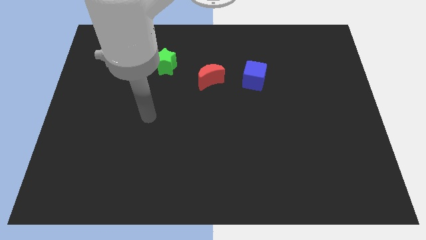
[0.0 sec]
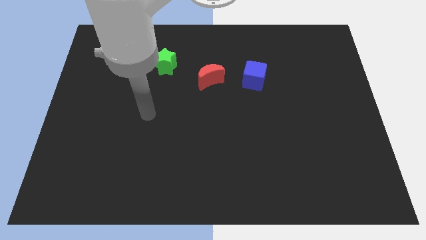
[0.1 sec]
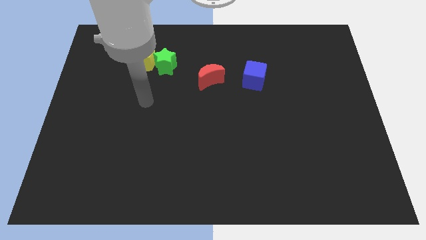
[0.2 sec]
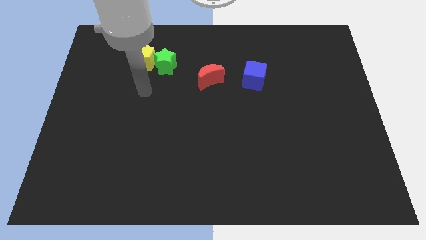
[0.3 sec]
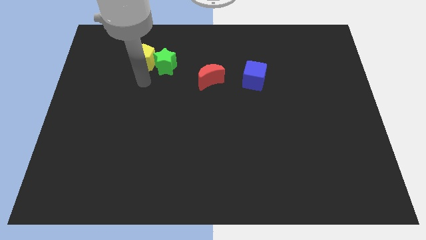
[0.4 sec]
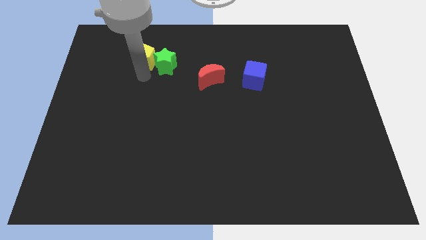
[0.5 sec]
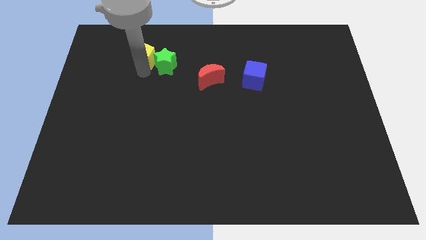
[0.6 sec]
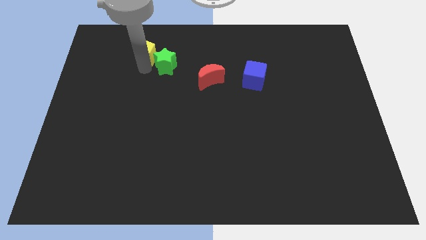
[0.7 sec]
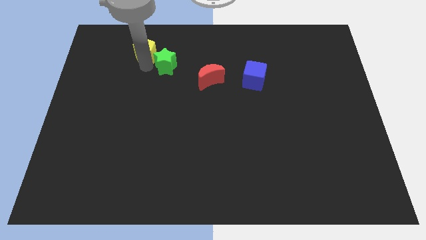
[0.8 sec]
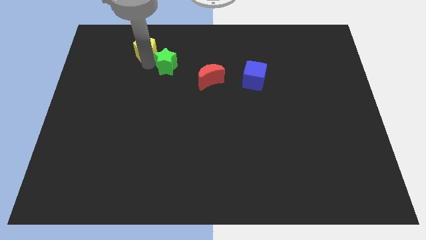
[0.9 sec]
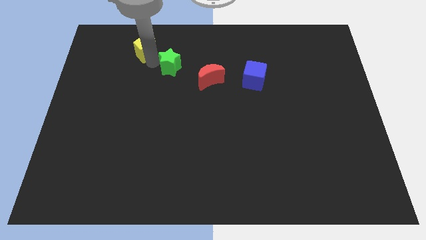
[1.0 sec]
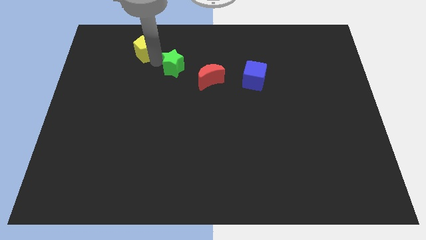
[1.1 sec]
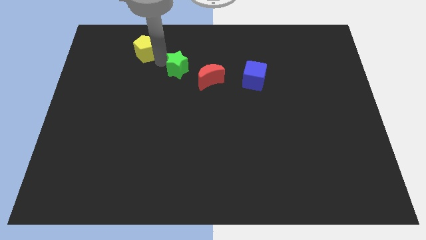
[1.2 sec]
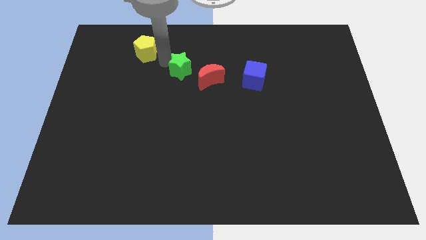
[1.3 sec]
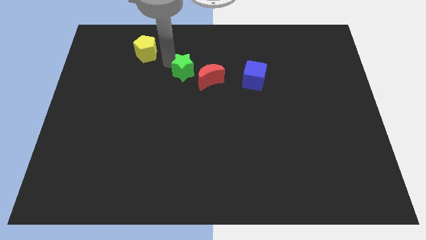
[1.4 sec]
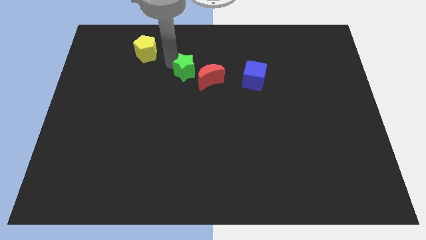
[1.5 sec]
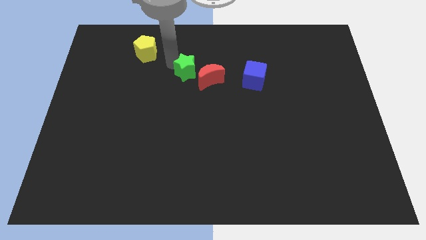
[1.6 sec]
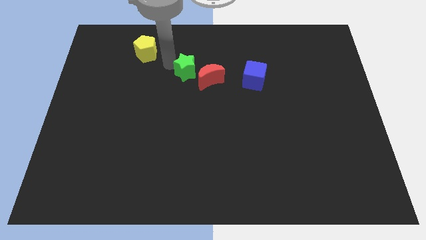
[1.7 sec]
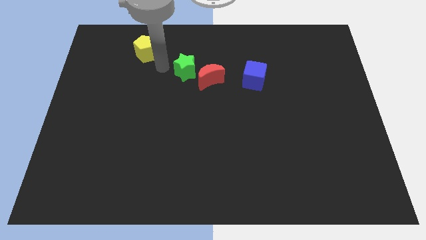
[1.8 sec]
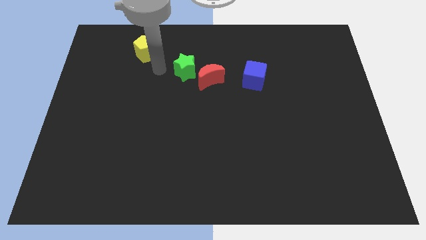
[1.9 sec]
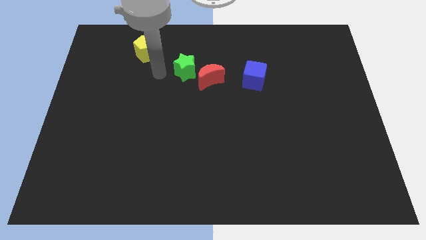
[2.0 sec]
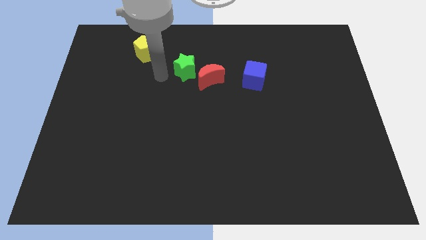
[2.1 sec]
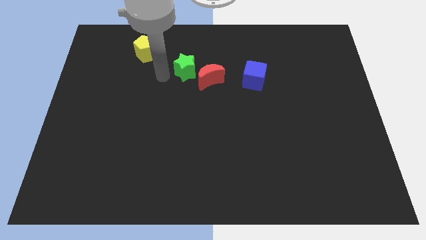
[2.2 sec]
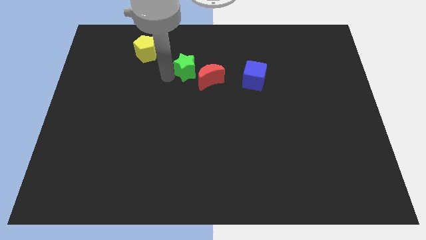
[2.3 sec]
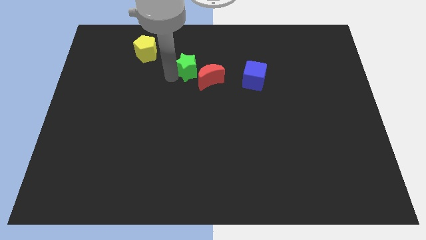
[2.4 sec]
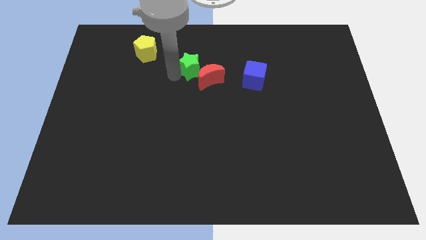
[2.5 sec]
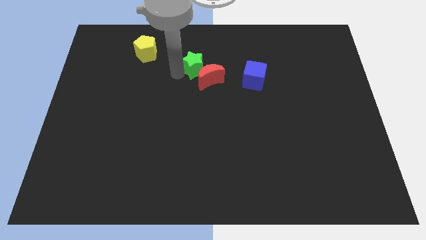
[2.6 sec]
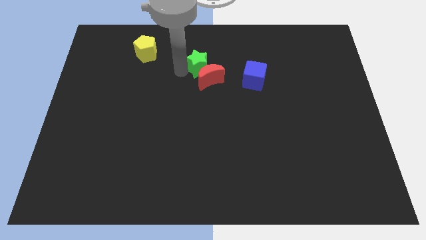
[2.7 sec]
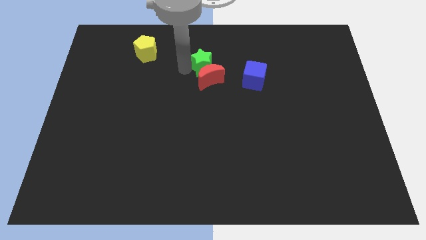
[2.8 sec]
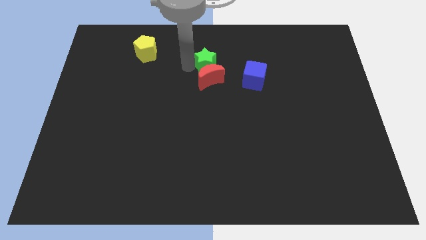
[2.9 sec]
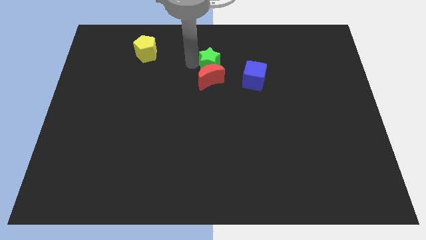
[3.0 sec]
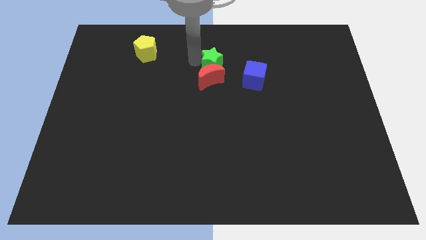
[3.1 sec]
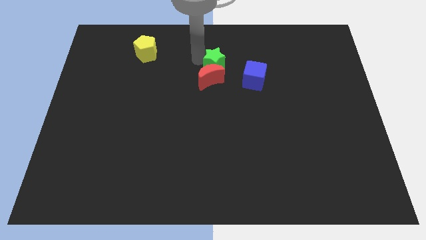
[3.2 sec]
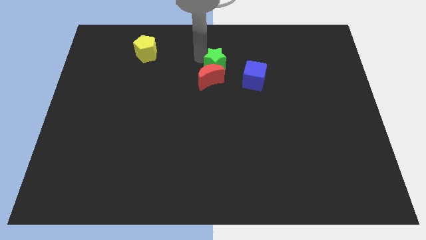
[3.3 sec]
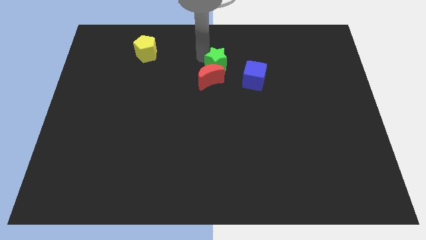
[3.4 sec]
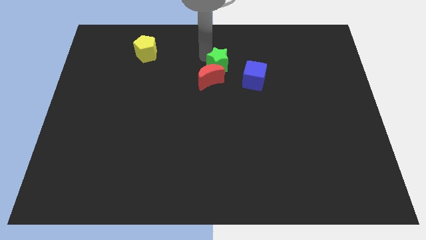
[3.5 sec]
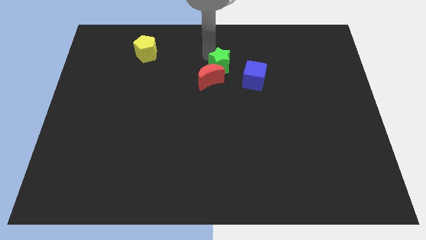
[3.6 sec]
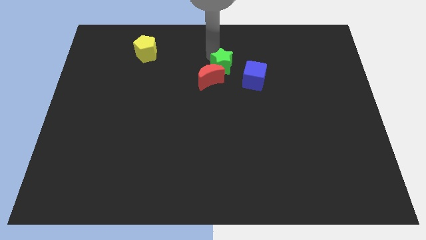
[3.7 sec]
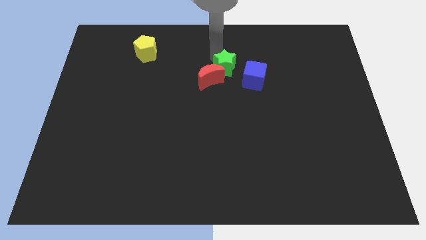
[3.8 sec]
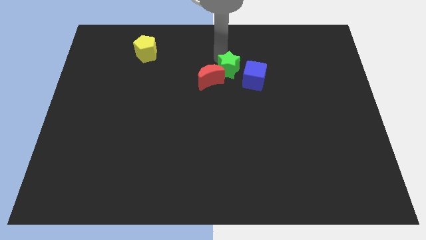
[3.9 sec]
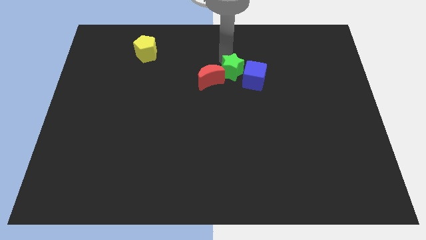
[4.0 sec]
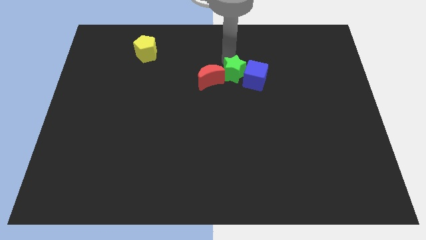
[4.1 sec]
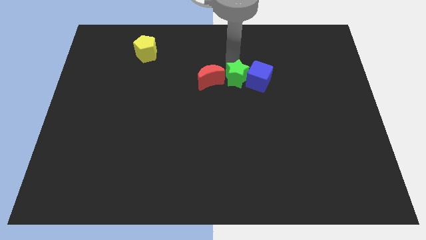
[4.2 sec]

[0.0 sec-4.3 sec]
move the star next to the blue block

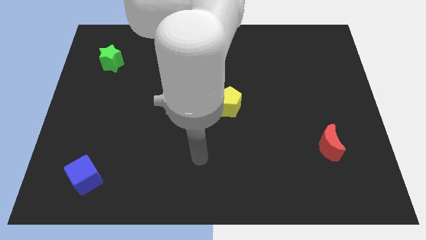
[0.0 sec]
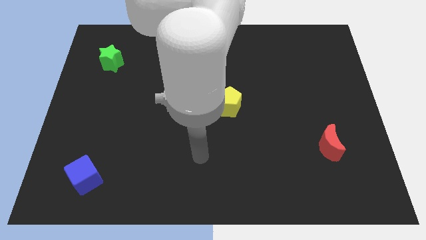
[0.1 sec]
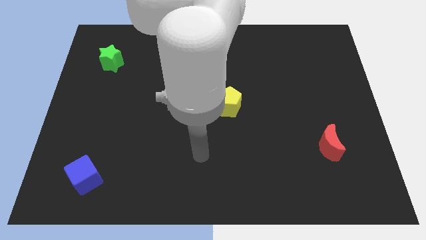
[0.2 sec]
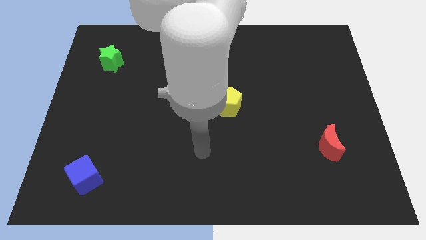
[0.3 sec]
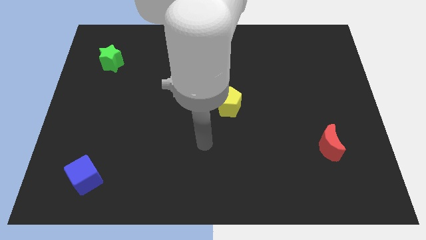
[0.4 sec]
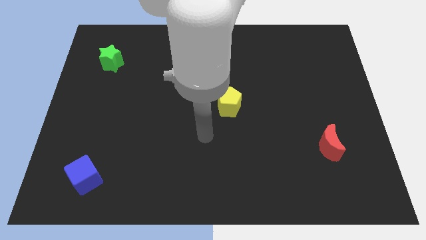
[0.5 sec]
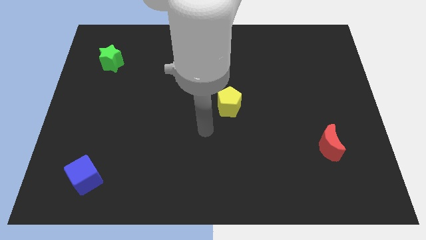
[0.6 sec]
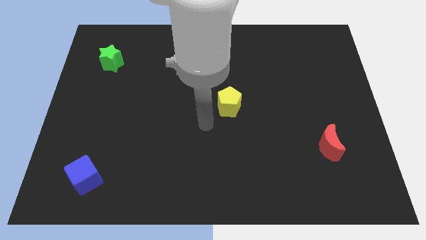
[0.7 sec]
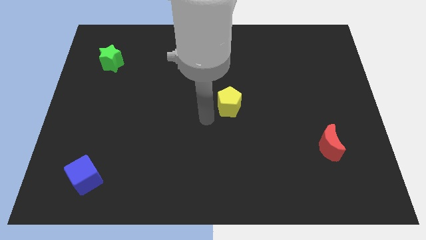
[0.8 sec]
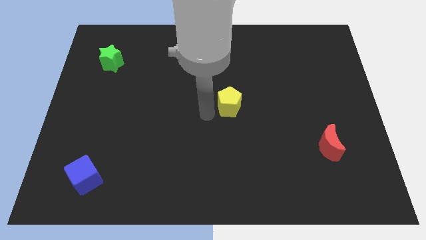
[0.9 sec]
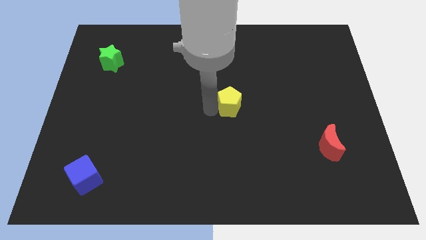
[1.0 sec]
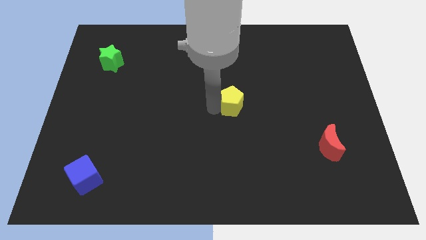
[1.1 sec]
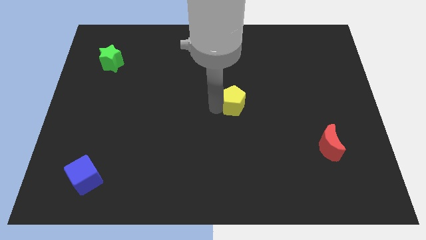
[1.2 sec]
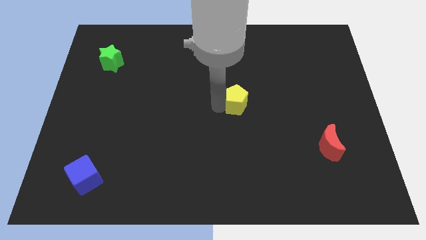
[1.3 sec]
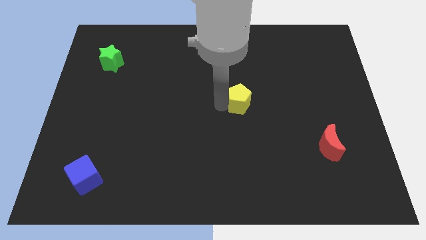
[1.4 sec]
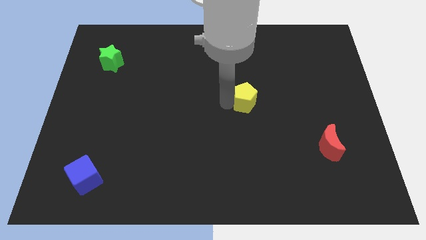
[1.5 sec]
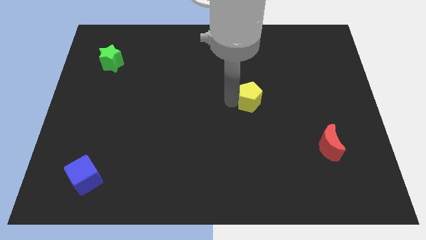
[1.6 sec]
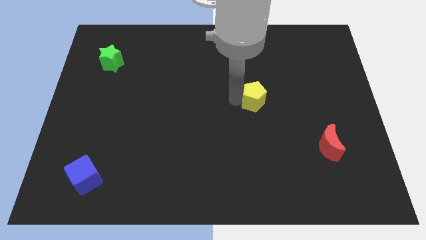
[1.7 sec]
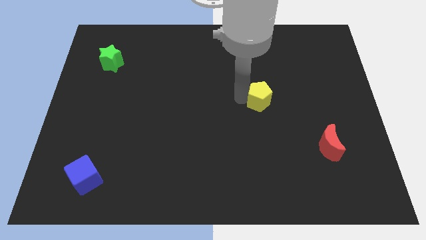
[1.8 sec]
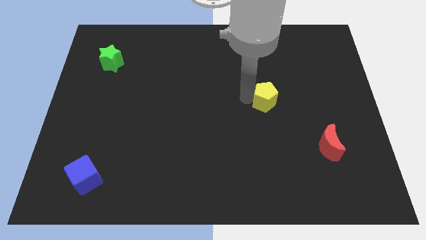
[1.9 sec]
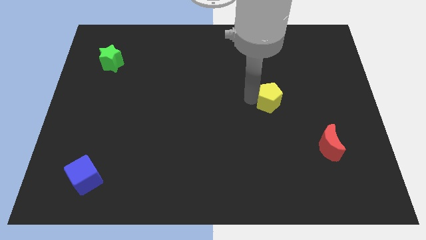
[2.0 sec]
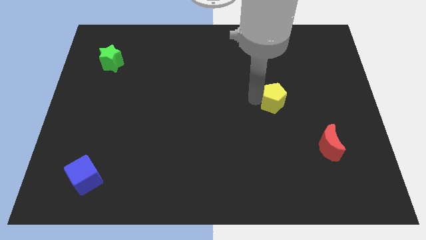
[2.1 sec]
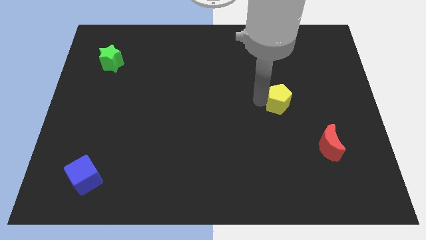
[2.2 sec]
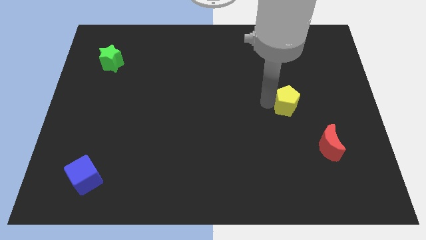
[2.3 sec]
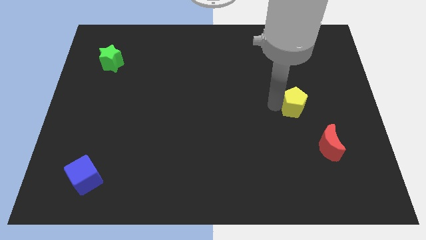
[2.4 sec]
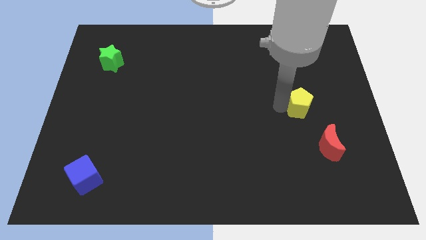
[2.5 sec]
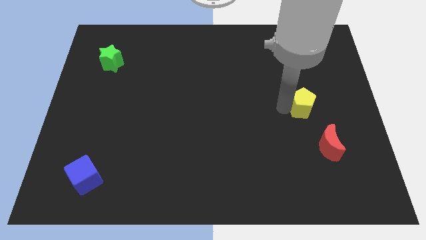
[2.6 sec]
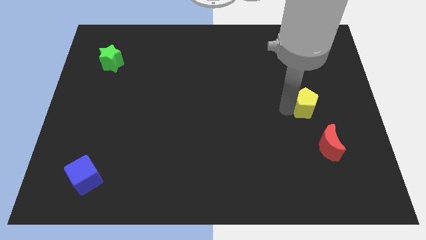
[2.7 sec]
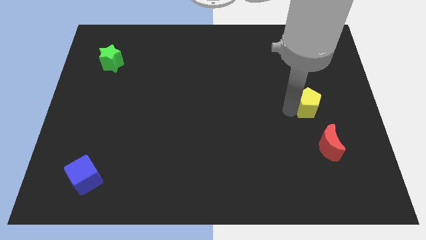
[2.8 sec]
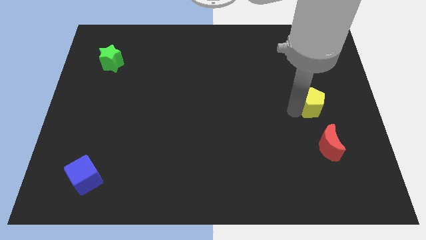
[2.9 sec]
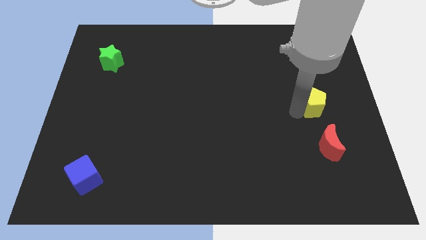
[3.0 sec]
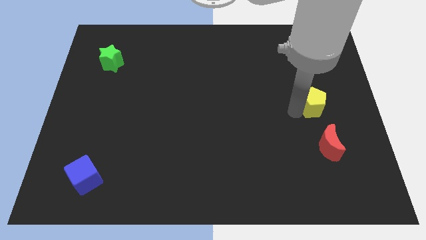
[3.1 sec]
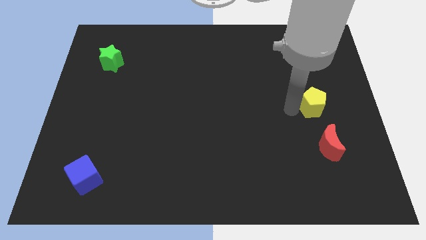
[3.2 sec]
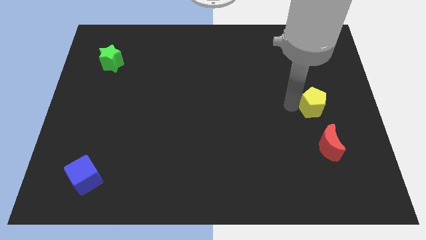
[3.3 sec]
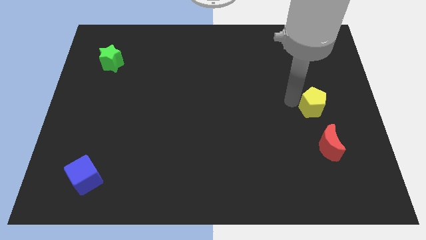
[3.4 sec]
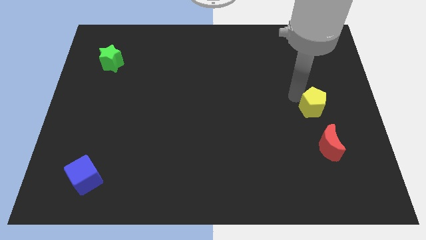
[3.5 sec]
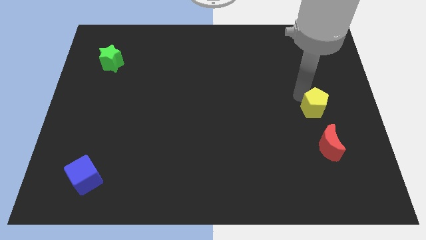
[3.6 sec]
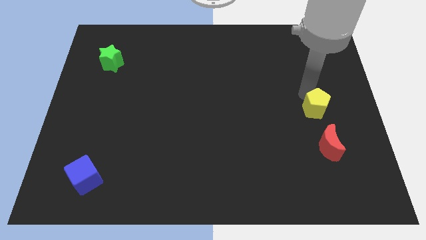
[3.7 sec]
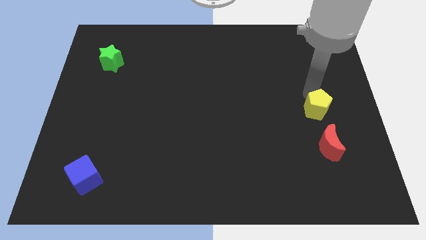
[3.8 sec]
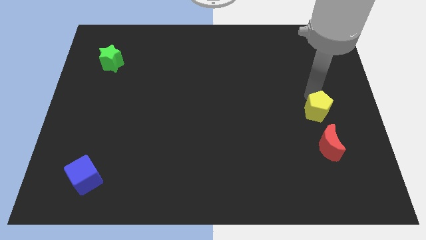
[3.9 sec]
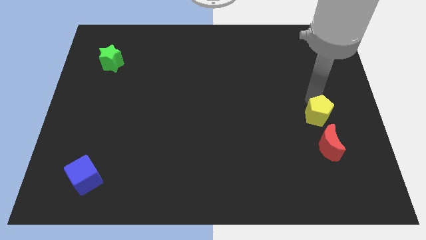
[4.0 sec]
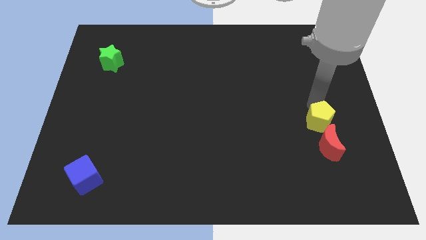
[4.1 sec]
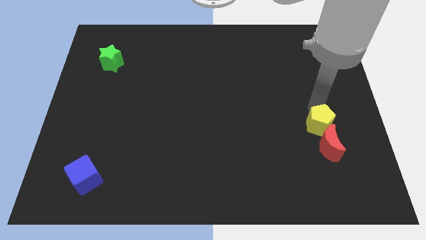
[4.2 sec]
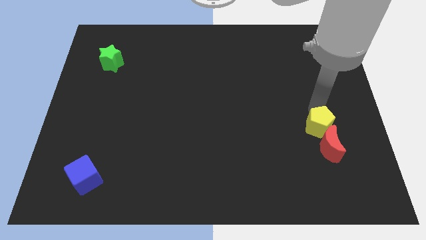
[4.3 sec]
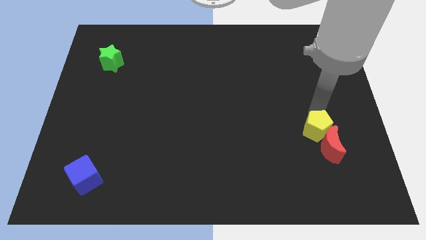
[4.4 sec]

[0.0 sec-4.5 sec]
slide the pentagon next to the red moon
